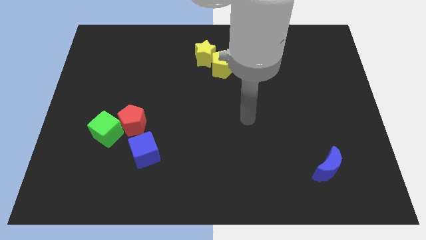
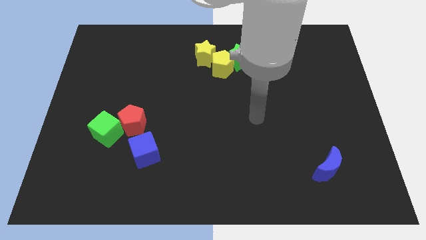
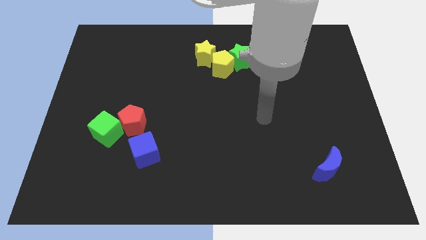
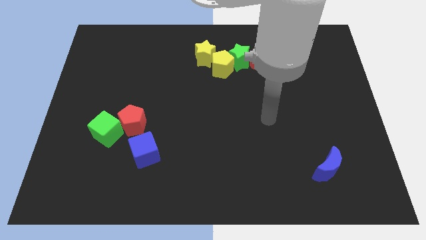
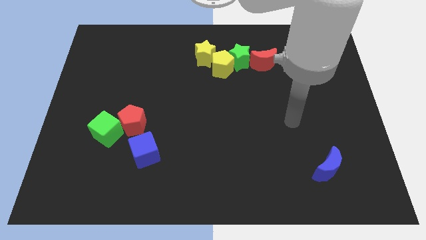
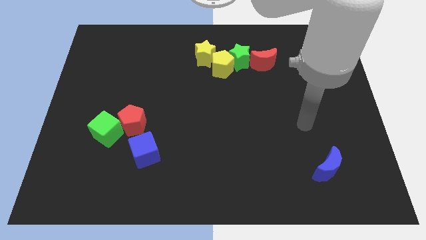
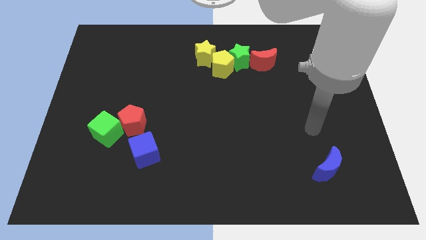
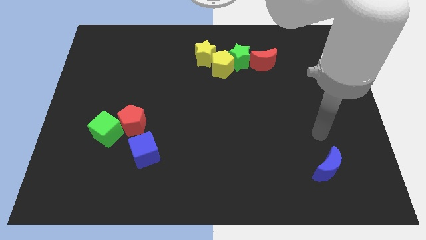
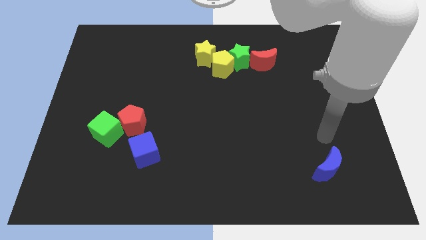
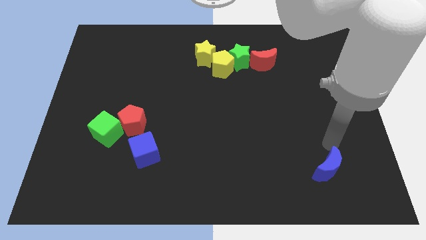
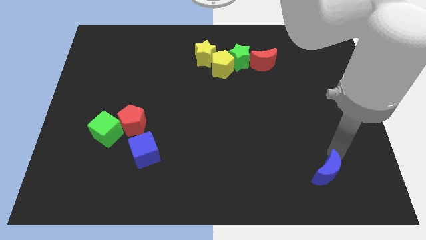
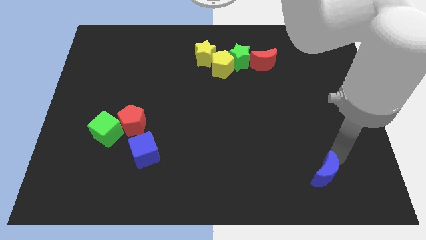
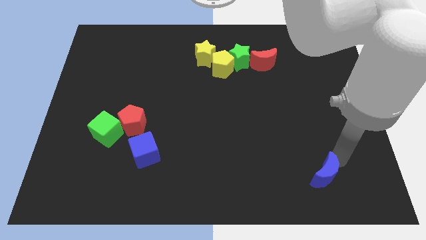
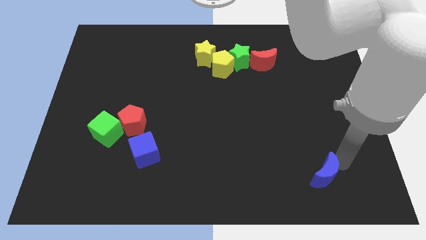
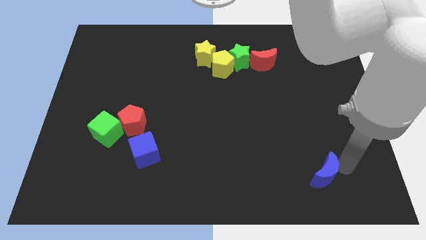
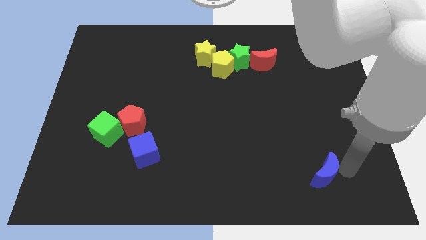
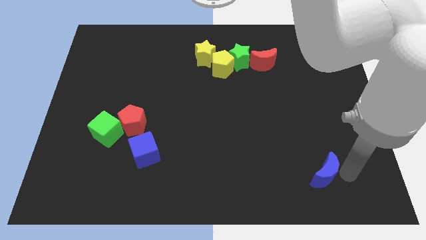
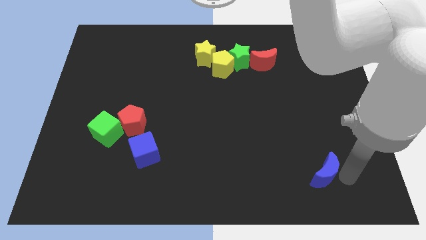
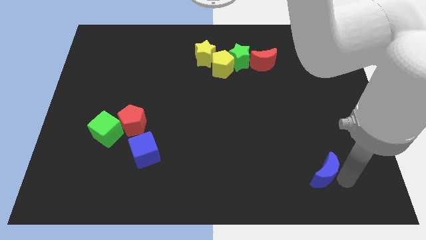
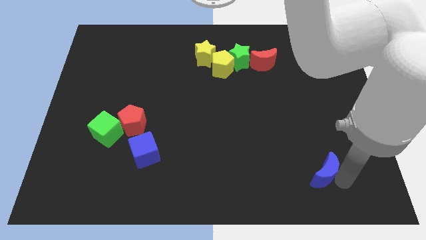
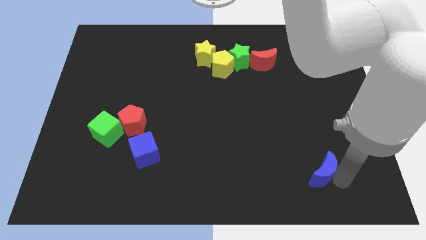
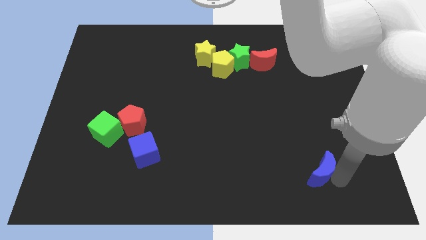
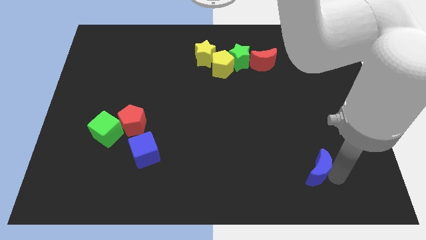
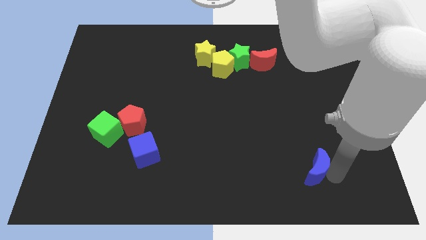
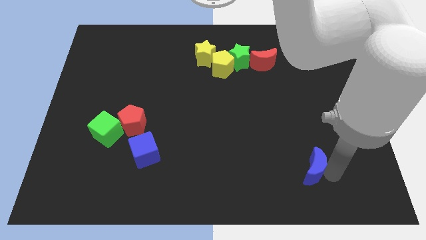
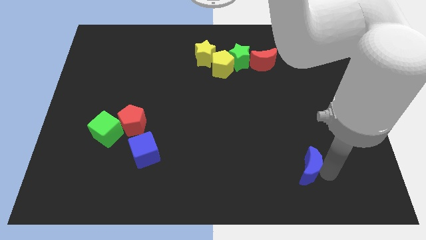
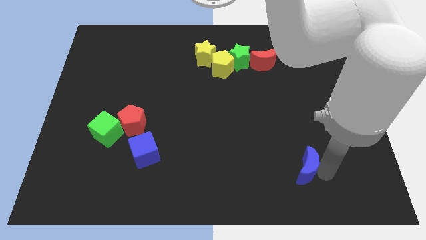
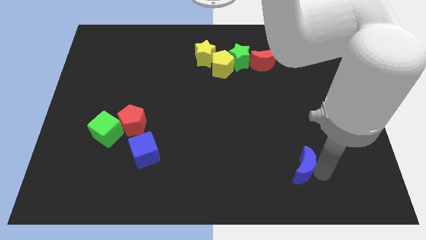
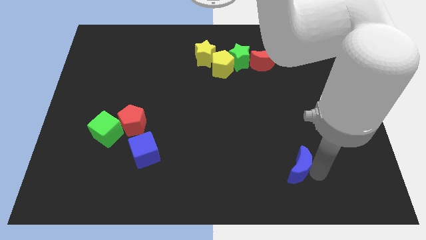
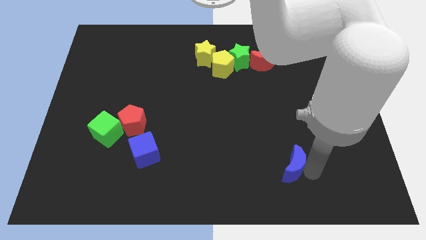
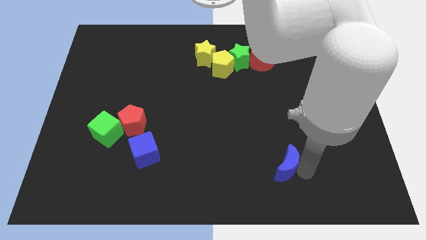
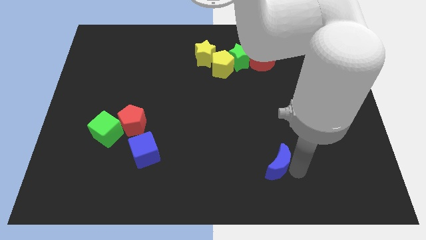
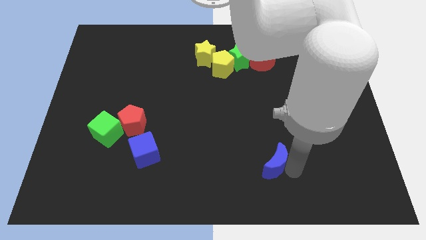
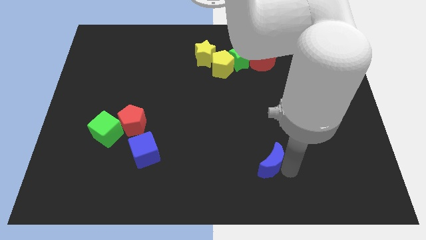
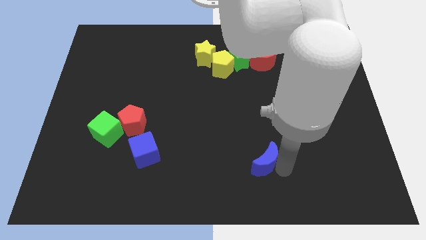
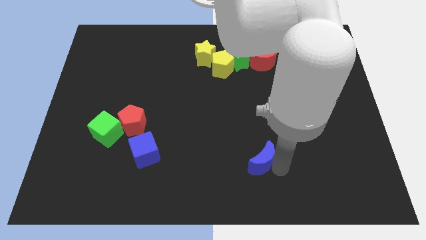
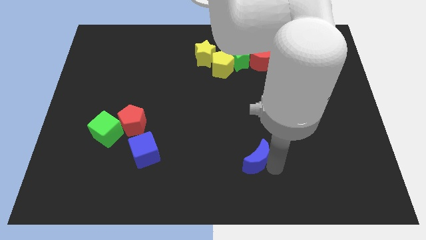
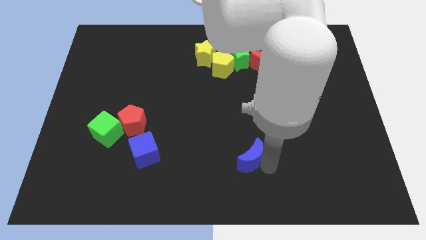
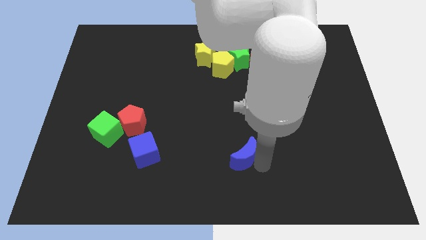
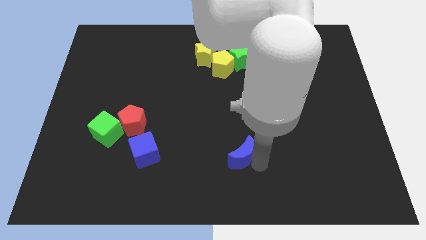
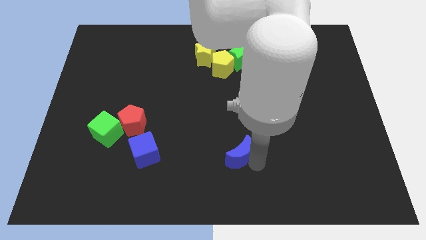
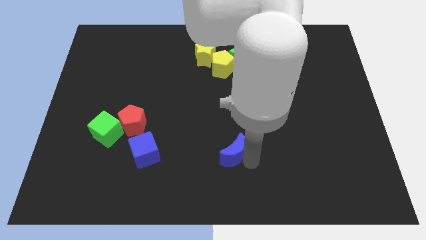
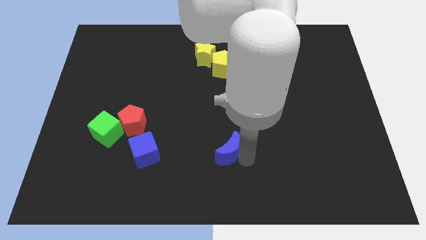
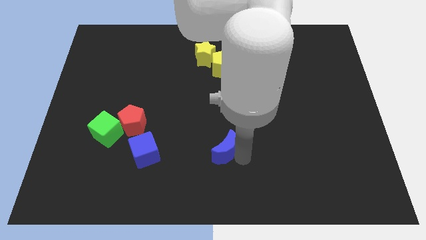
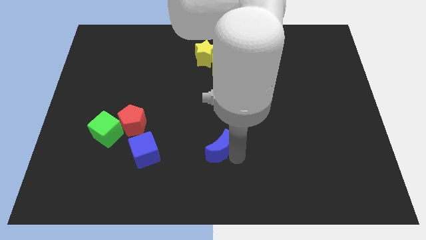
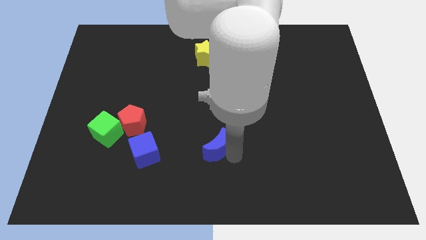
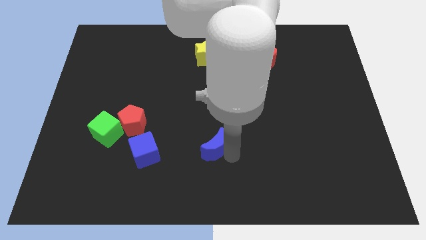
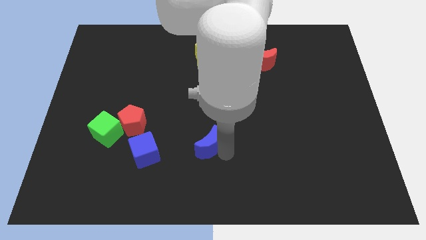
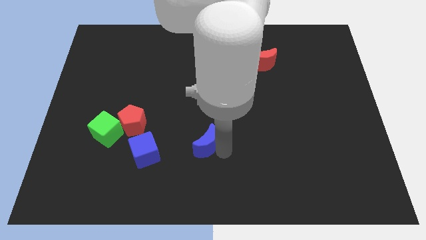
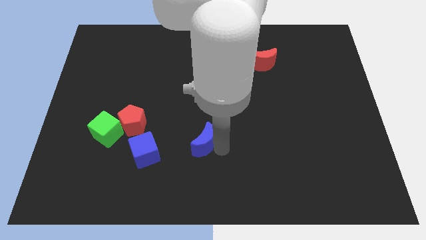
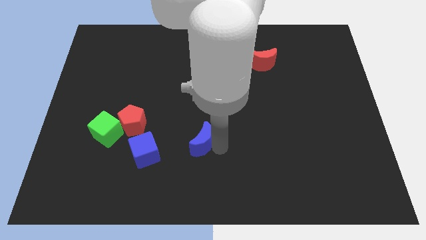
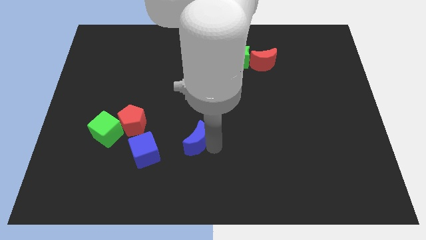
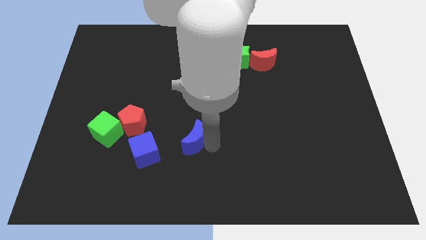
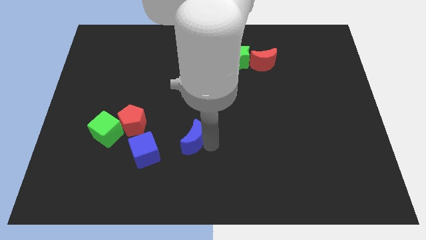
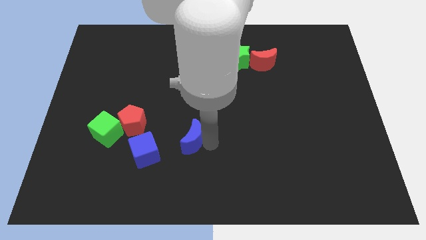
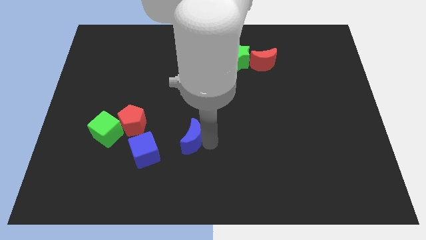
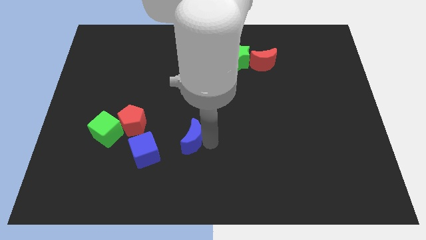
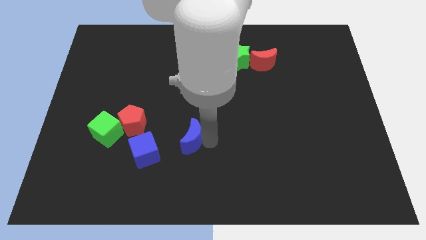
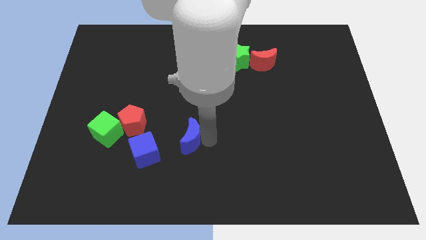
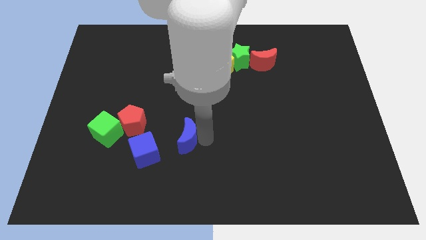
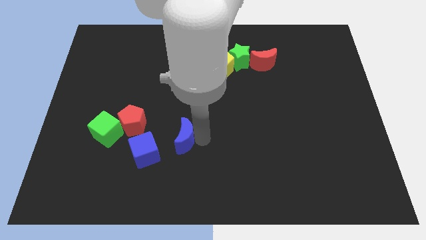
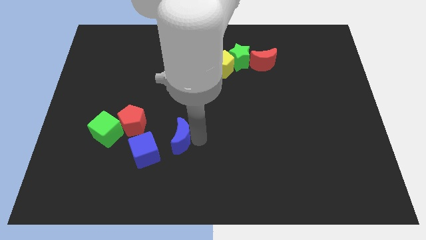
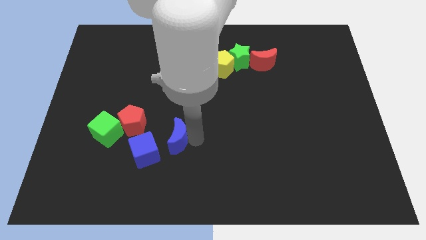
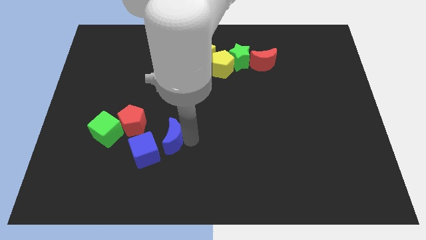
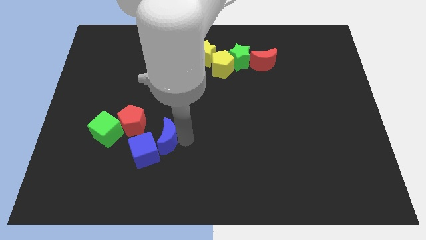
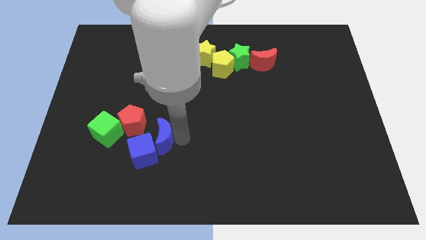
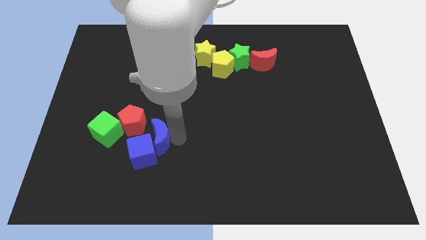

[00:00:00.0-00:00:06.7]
move the blue moon next to the blue cube

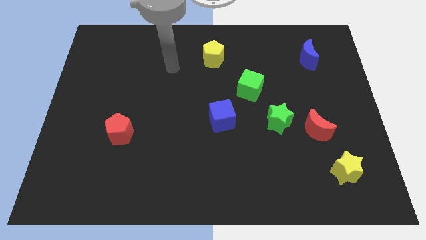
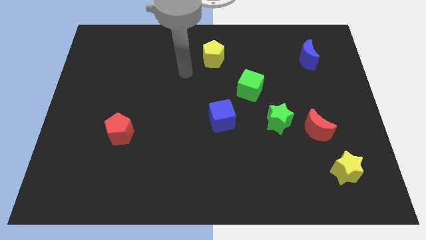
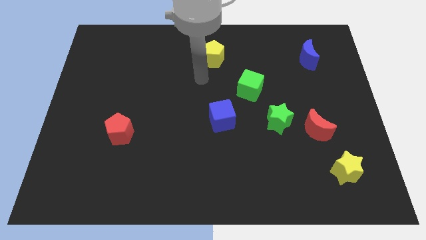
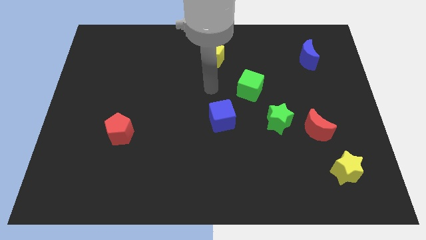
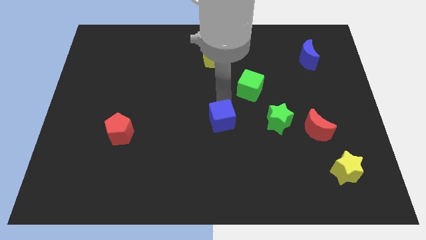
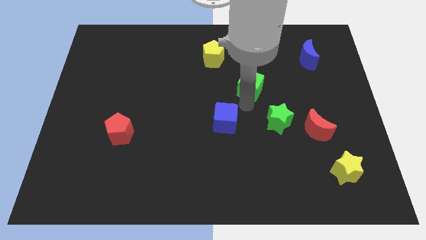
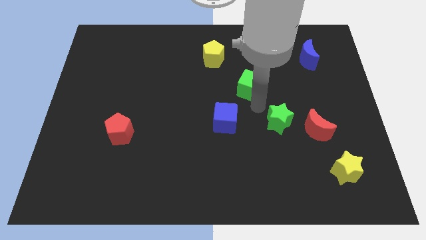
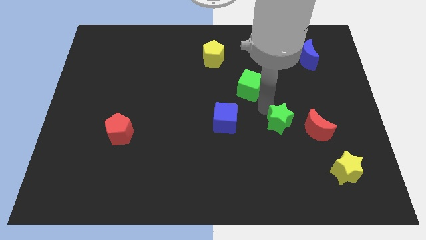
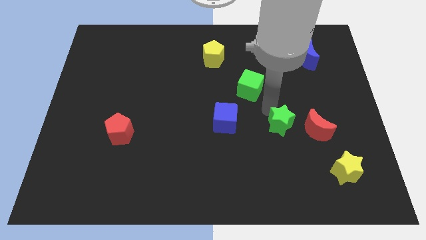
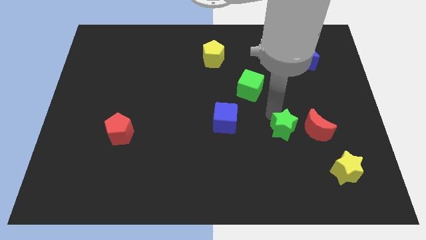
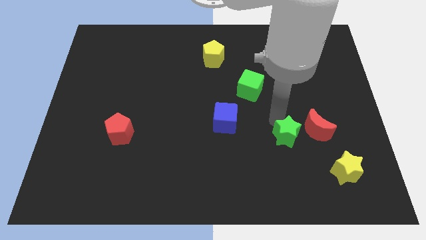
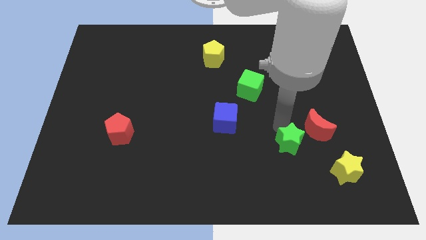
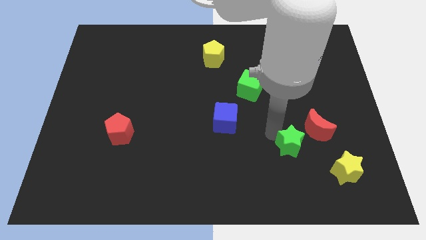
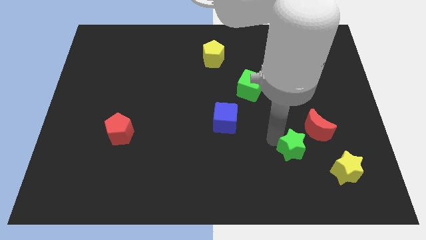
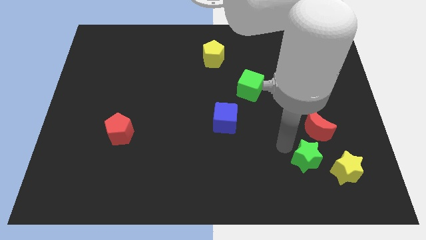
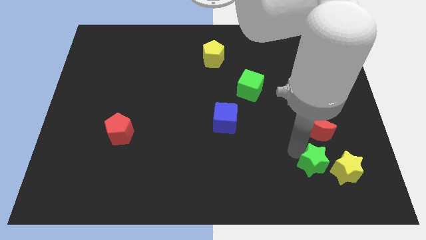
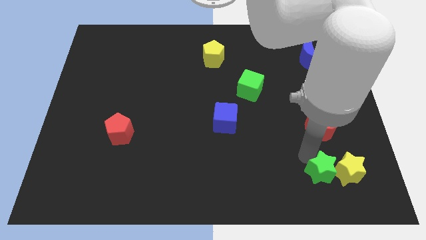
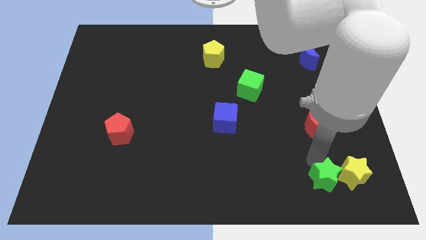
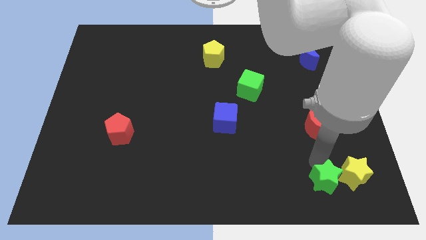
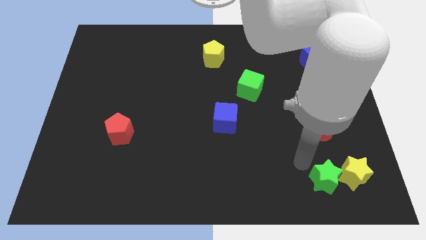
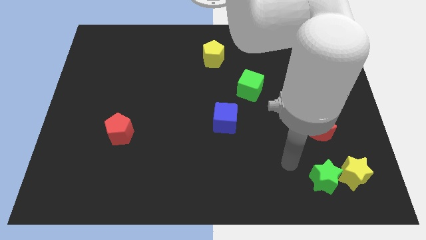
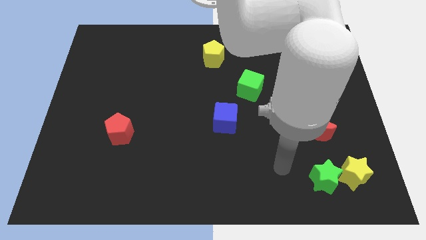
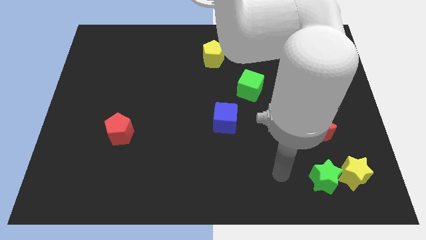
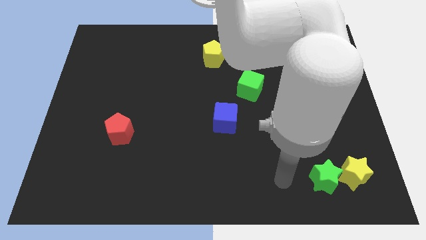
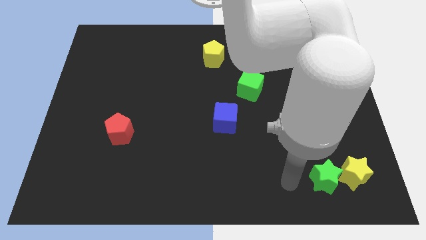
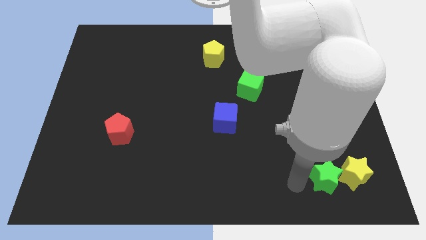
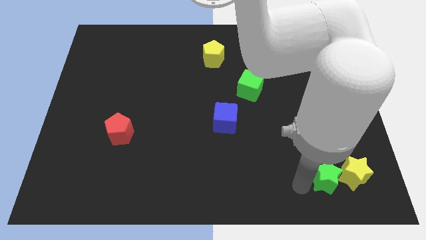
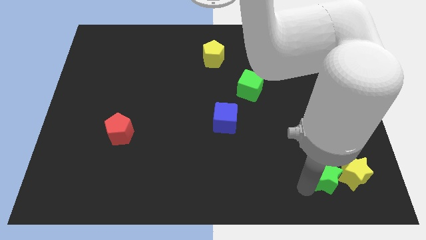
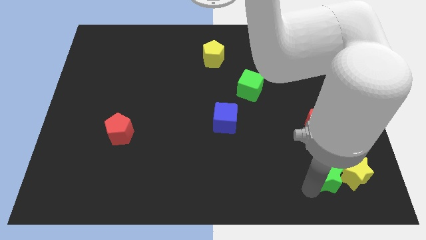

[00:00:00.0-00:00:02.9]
push the green star towards the yellow star
